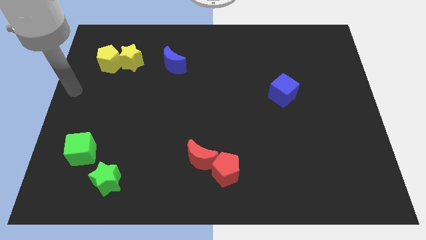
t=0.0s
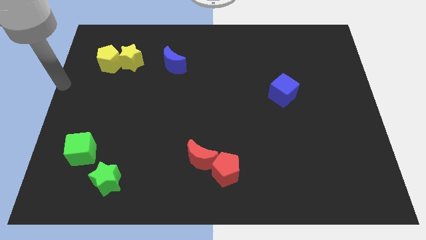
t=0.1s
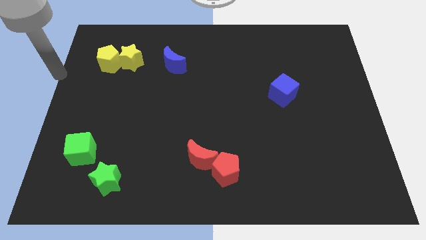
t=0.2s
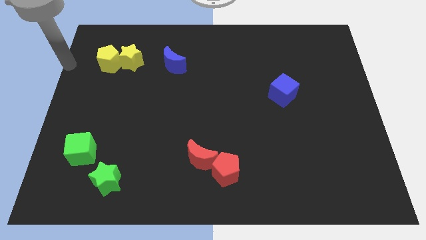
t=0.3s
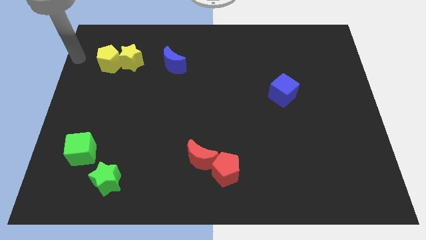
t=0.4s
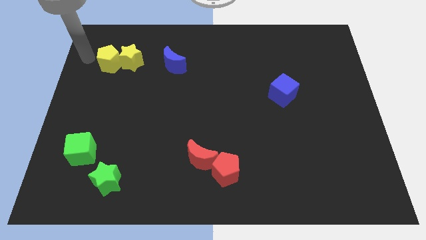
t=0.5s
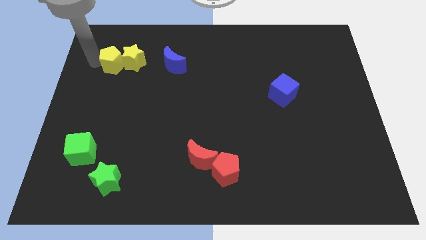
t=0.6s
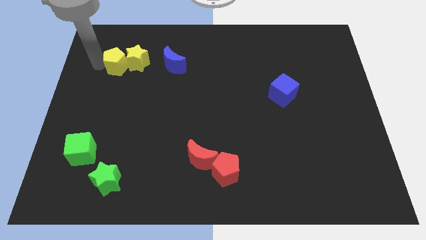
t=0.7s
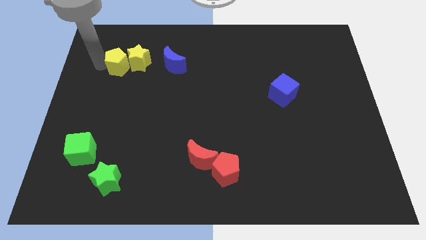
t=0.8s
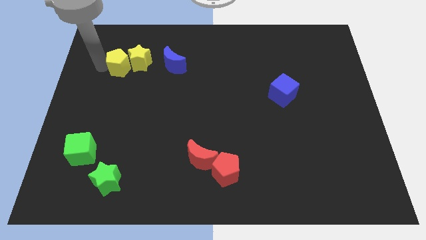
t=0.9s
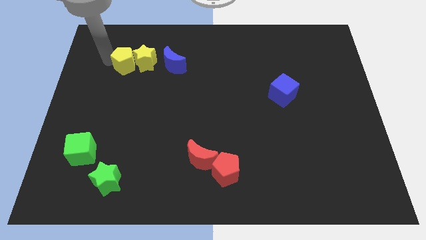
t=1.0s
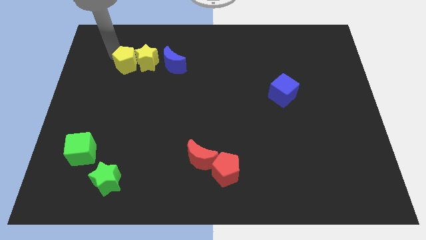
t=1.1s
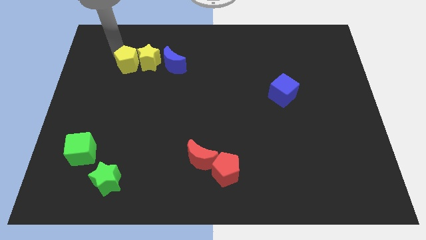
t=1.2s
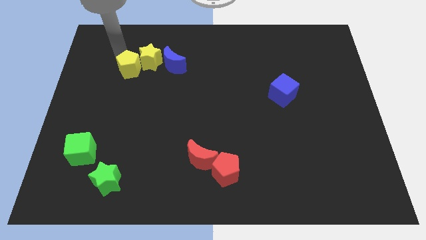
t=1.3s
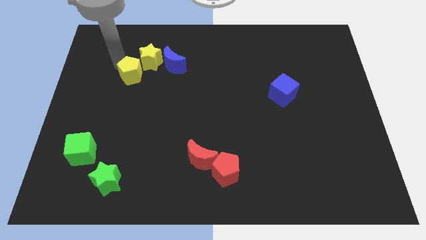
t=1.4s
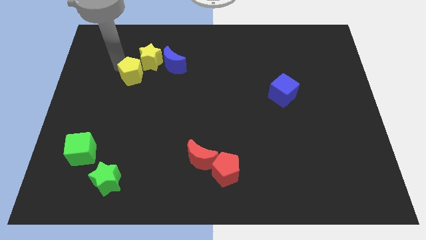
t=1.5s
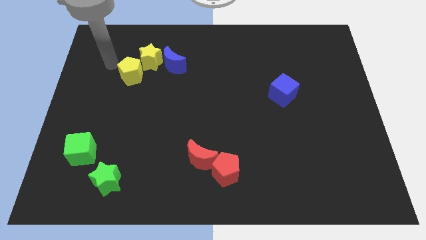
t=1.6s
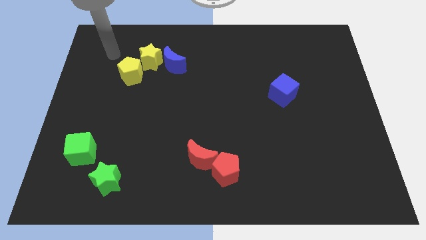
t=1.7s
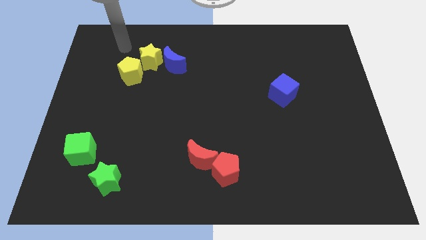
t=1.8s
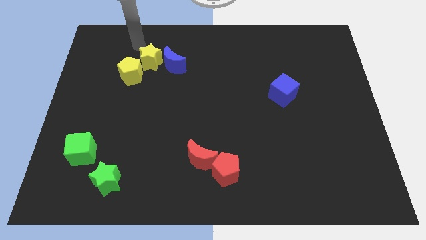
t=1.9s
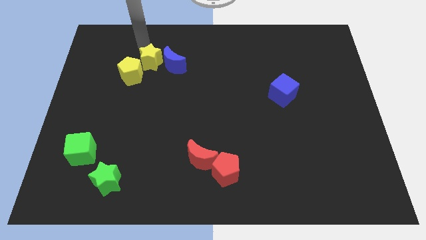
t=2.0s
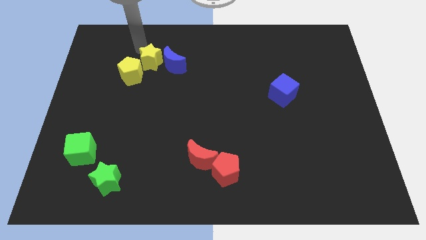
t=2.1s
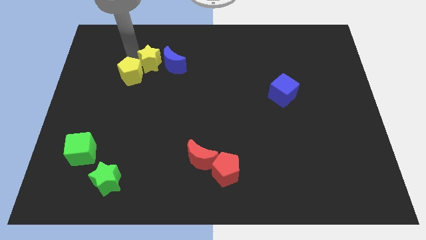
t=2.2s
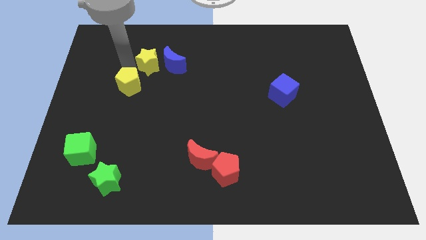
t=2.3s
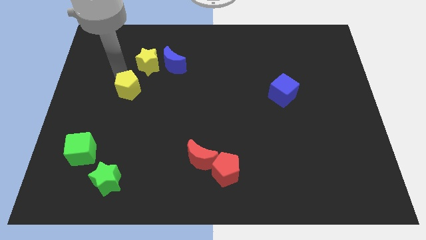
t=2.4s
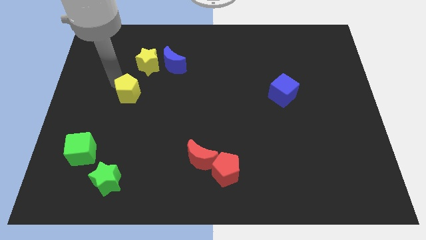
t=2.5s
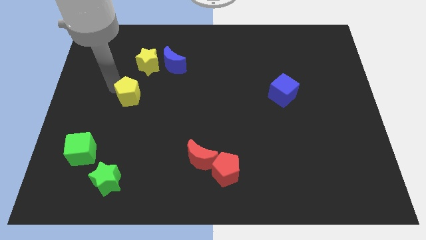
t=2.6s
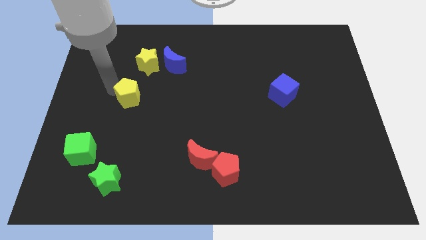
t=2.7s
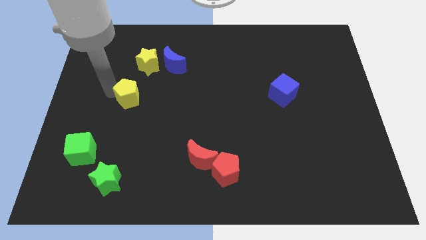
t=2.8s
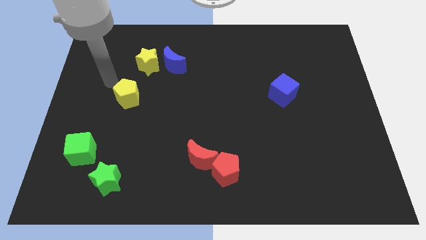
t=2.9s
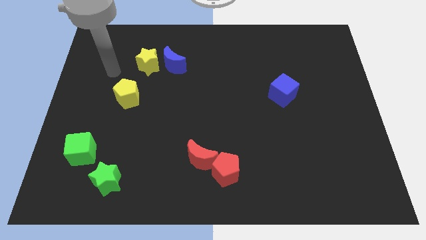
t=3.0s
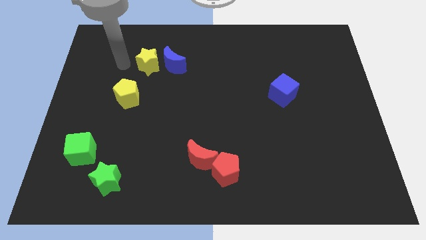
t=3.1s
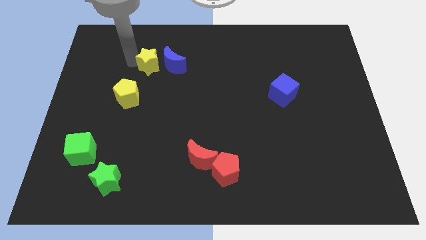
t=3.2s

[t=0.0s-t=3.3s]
move the yellow pentagon diagonal to the yellow star

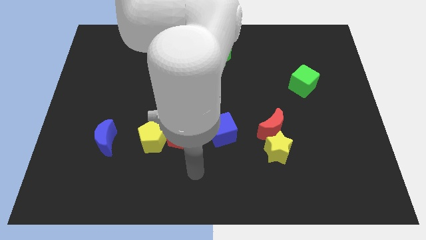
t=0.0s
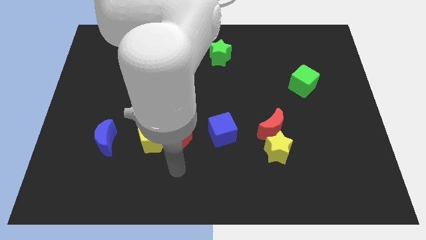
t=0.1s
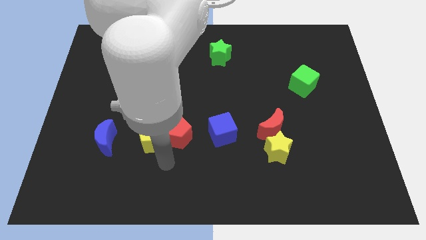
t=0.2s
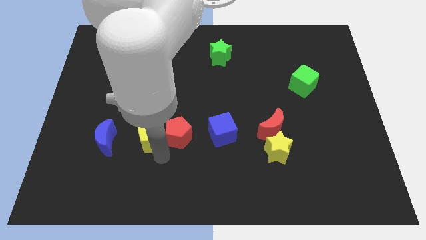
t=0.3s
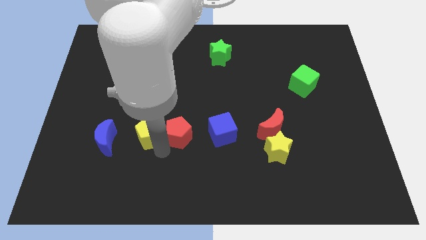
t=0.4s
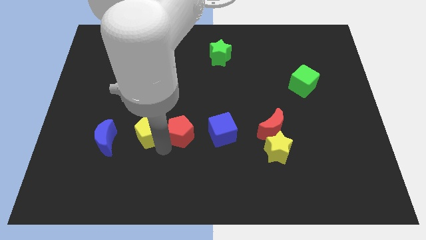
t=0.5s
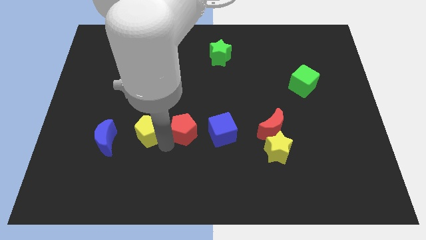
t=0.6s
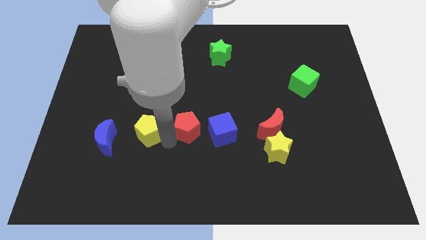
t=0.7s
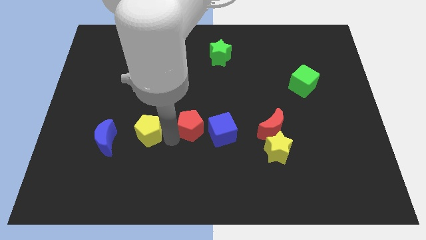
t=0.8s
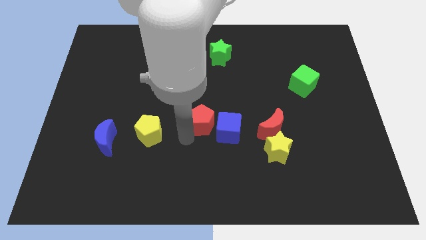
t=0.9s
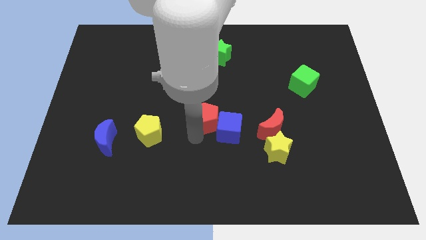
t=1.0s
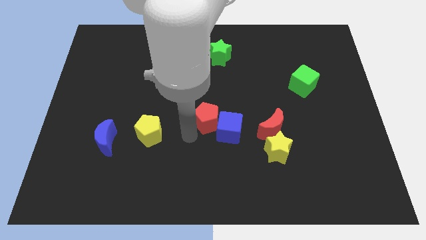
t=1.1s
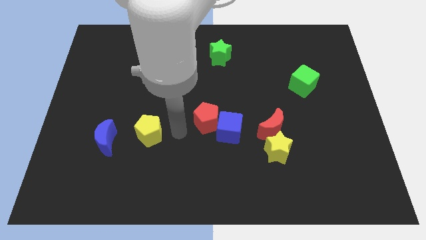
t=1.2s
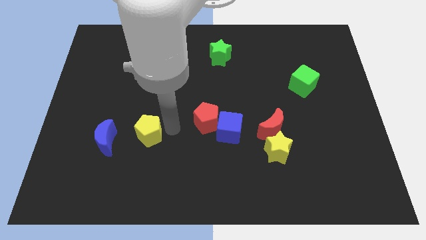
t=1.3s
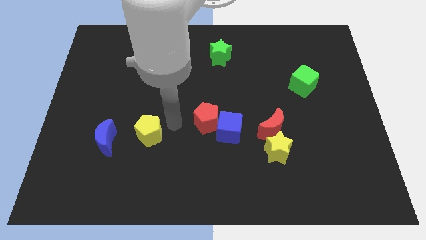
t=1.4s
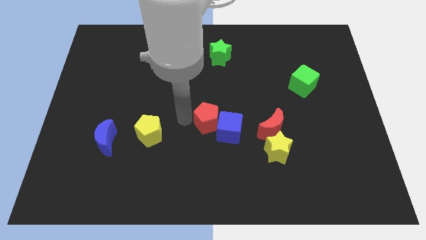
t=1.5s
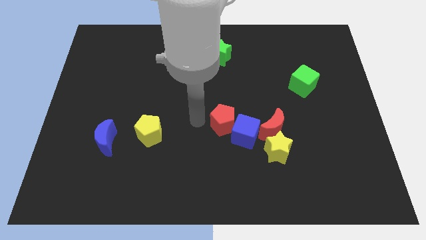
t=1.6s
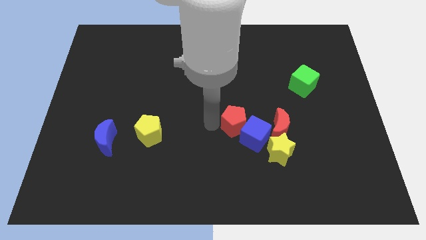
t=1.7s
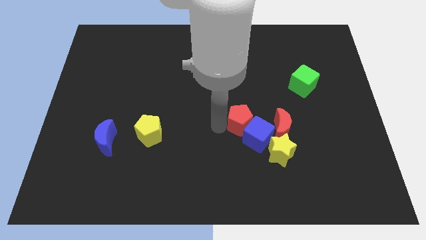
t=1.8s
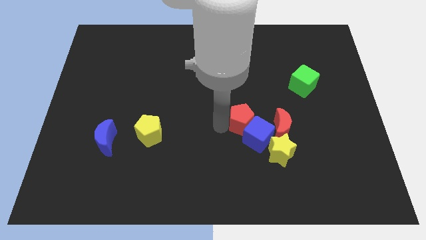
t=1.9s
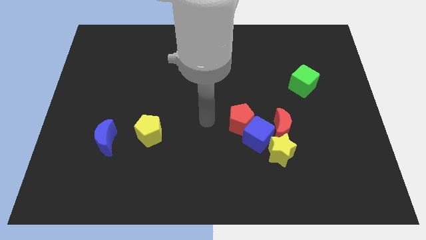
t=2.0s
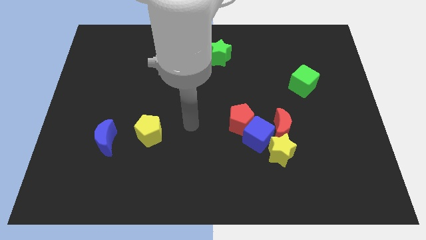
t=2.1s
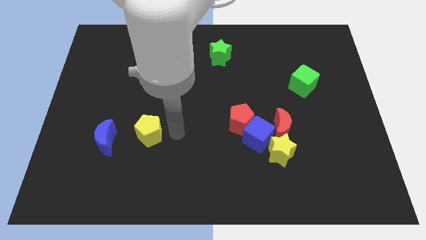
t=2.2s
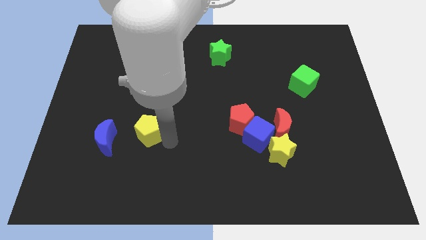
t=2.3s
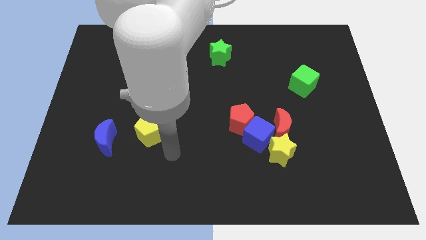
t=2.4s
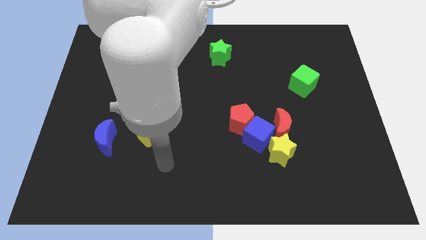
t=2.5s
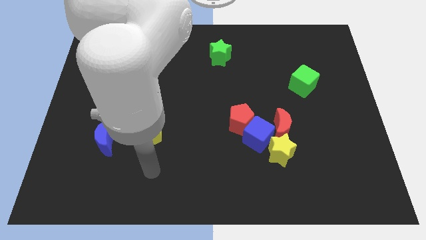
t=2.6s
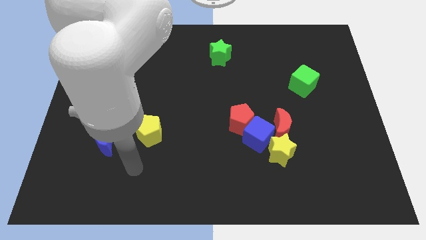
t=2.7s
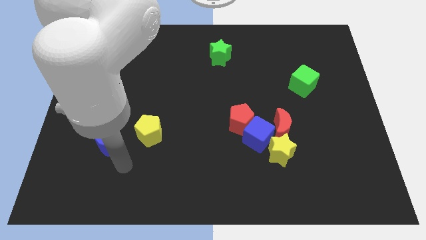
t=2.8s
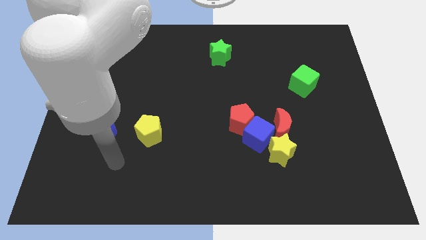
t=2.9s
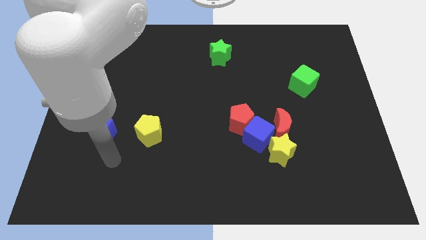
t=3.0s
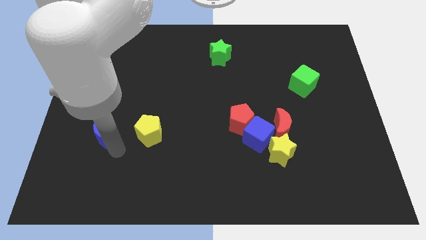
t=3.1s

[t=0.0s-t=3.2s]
slide the red pentagon in to blue cube

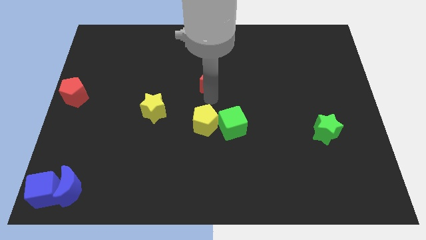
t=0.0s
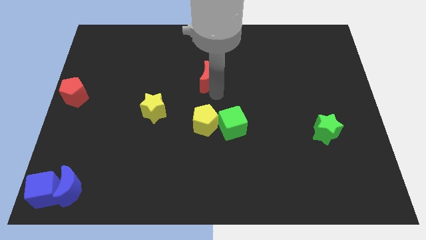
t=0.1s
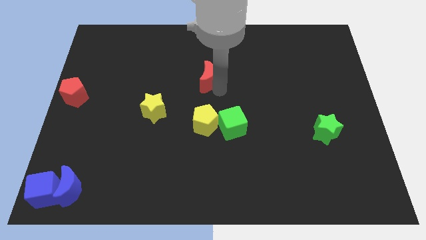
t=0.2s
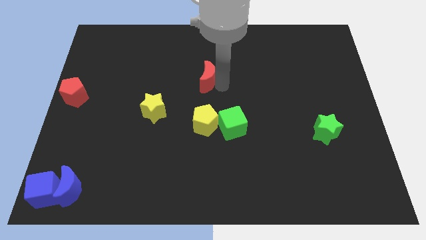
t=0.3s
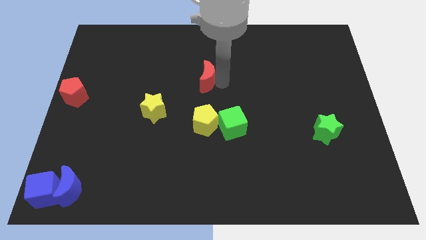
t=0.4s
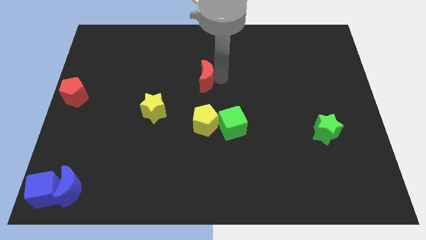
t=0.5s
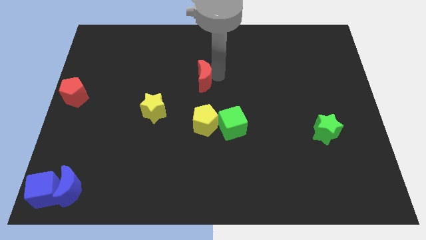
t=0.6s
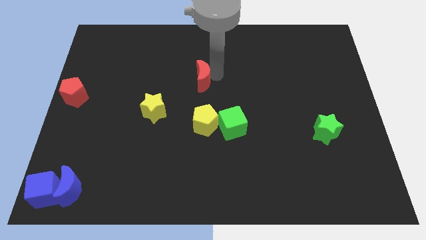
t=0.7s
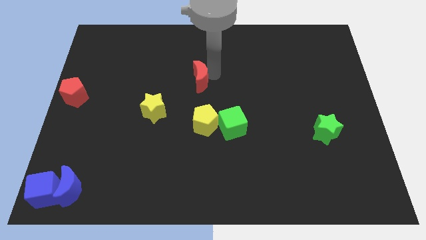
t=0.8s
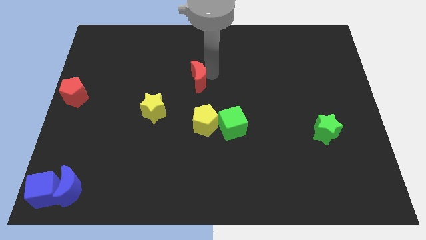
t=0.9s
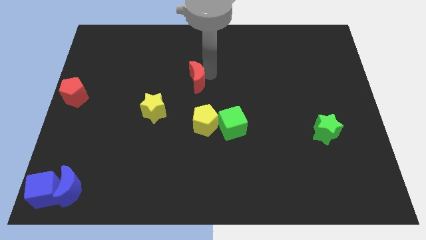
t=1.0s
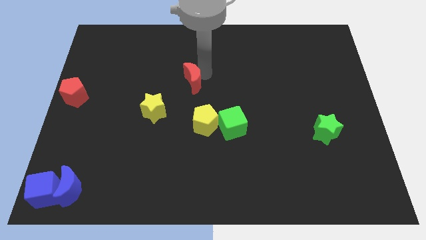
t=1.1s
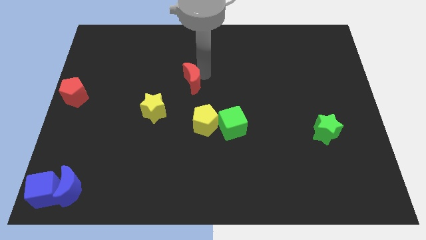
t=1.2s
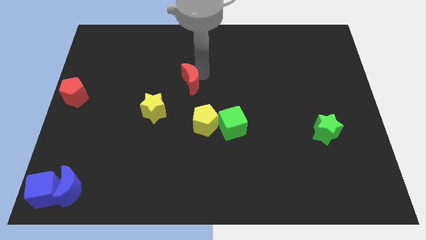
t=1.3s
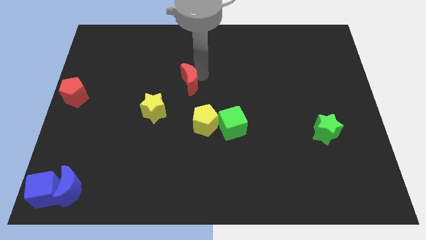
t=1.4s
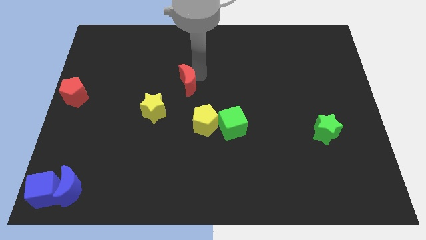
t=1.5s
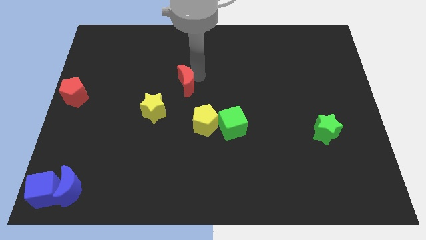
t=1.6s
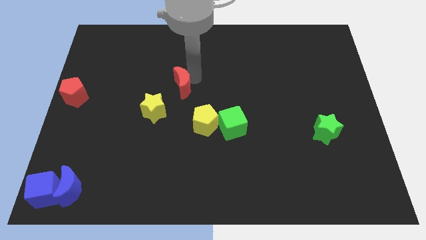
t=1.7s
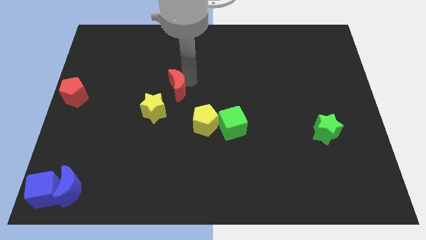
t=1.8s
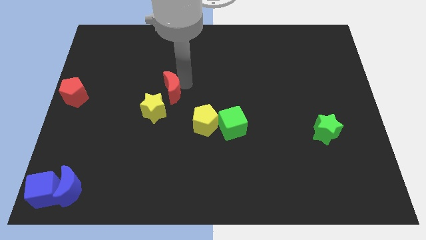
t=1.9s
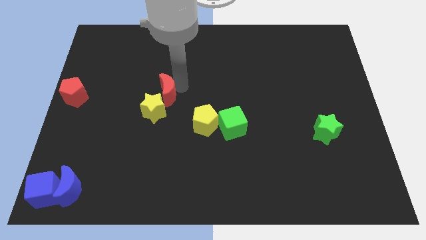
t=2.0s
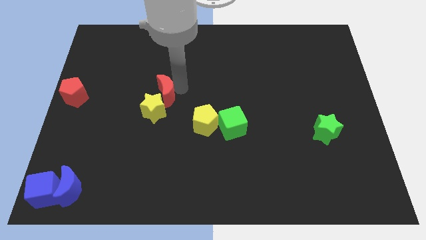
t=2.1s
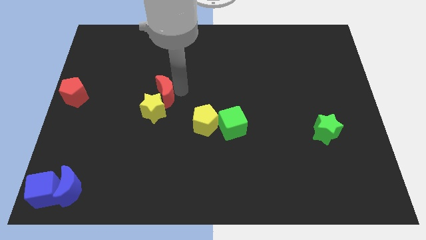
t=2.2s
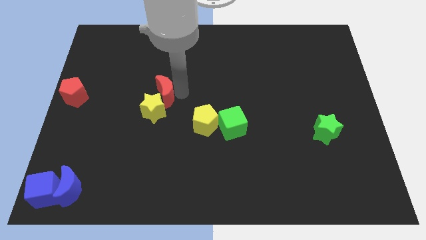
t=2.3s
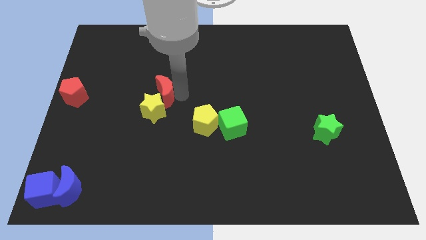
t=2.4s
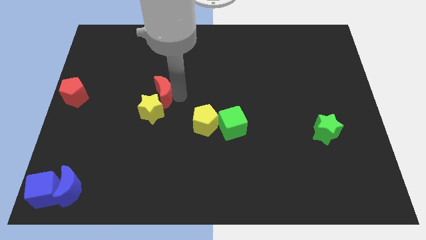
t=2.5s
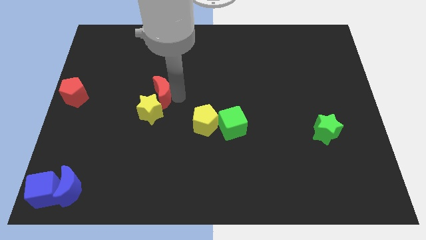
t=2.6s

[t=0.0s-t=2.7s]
move the red moon into the yellow star
